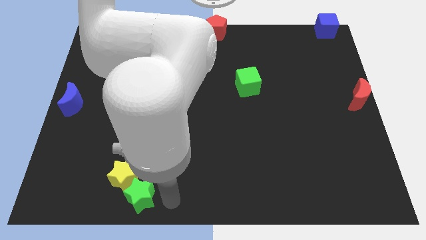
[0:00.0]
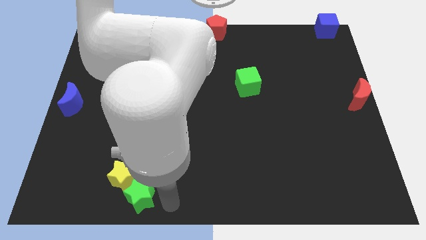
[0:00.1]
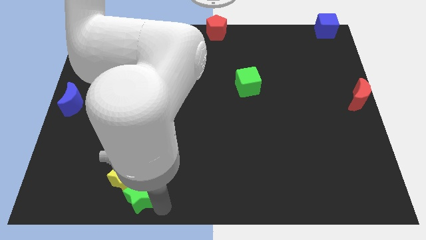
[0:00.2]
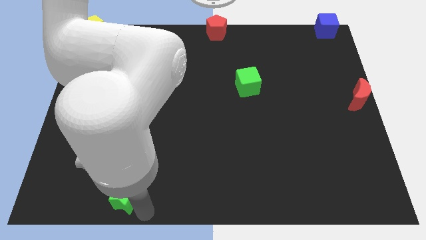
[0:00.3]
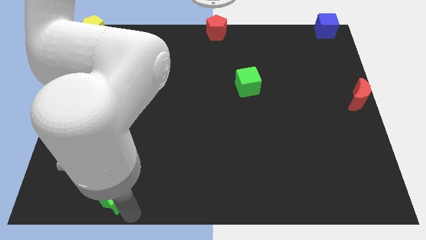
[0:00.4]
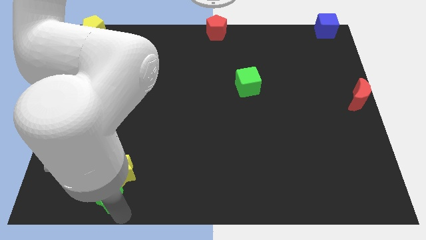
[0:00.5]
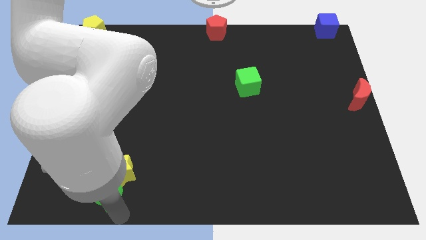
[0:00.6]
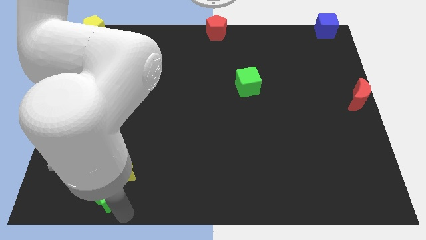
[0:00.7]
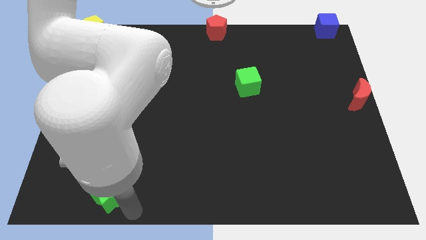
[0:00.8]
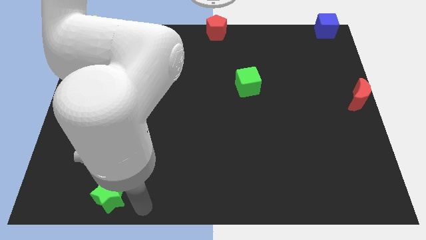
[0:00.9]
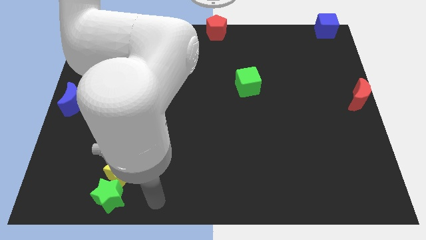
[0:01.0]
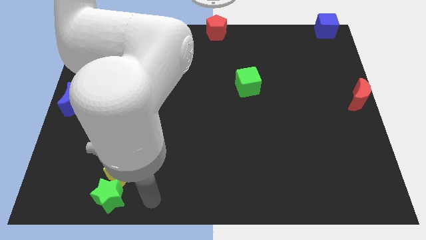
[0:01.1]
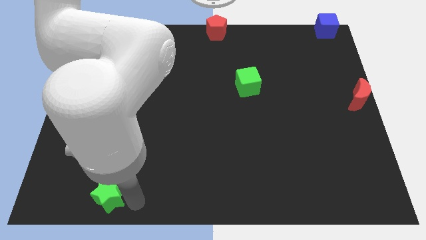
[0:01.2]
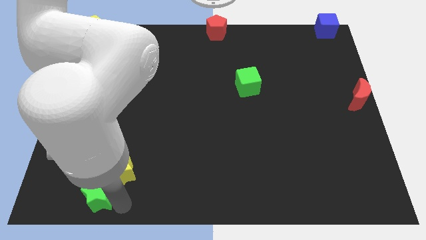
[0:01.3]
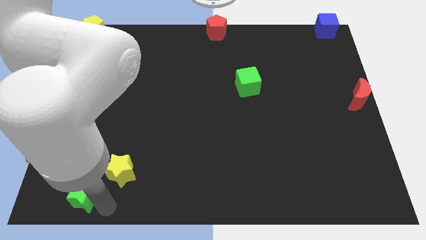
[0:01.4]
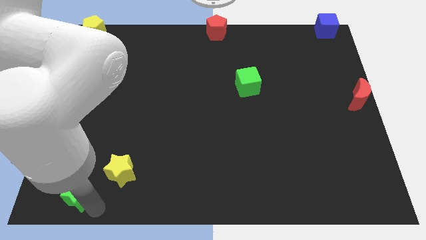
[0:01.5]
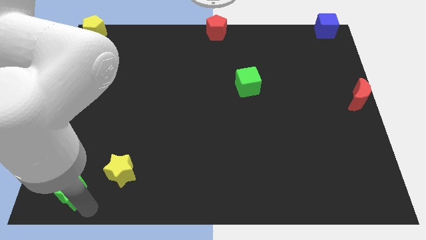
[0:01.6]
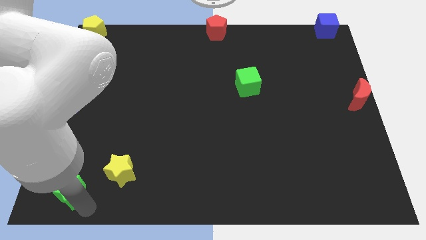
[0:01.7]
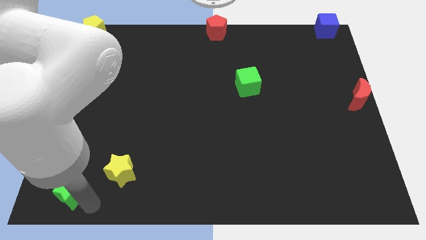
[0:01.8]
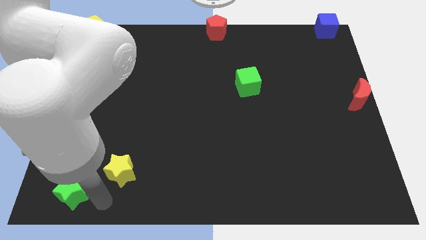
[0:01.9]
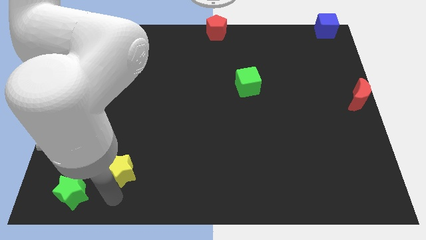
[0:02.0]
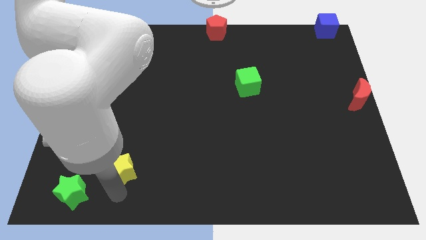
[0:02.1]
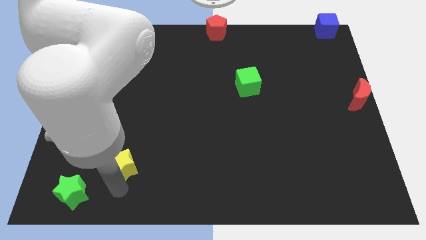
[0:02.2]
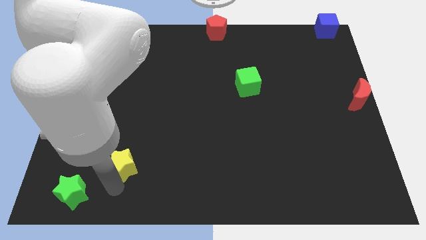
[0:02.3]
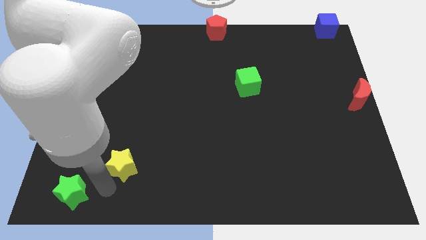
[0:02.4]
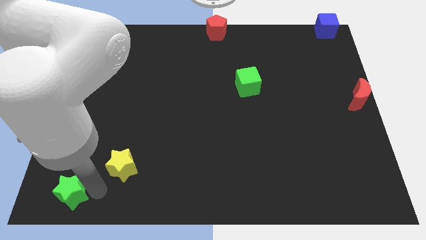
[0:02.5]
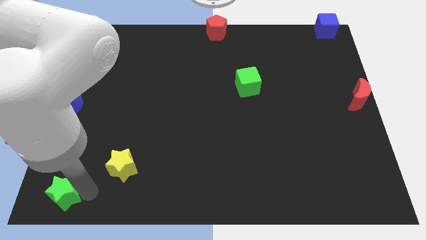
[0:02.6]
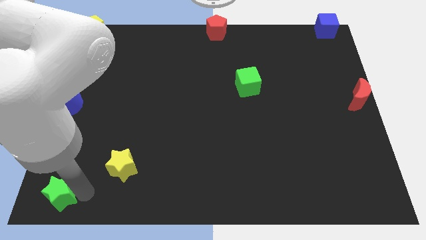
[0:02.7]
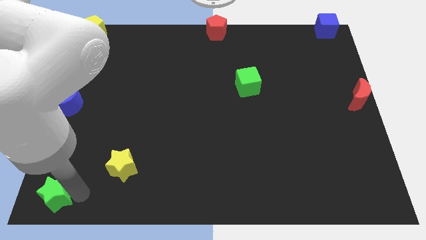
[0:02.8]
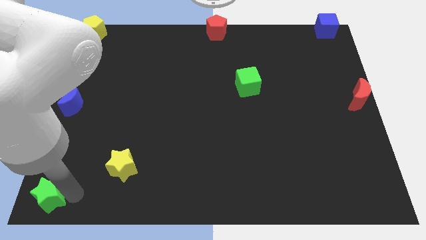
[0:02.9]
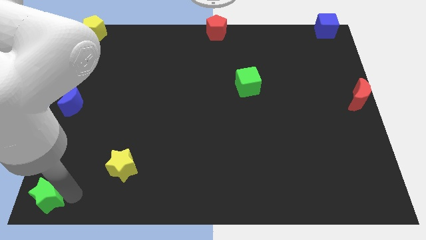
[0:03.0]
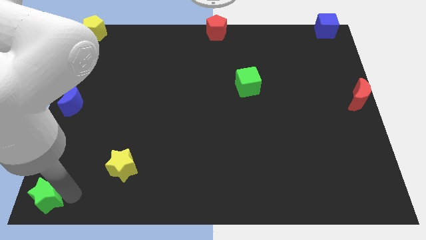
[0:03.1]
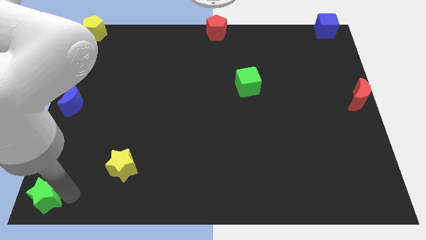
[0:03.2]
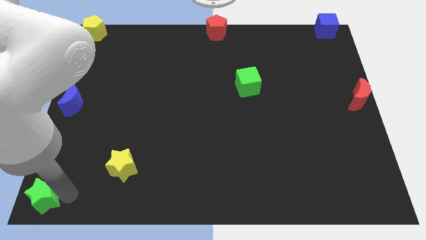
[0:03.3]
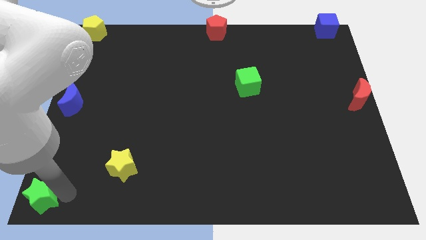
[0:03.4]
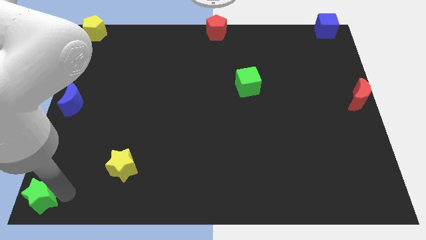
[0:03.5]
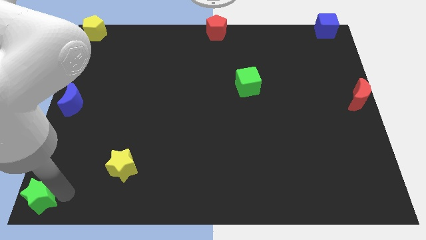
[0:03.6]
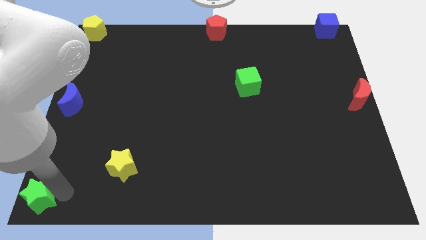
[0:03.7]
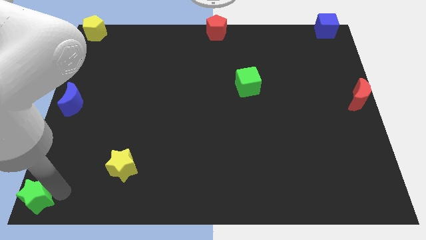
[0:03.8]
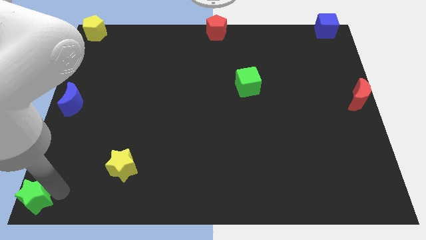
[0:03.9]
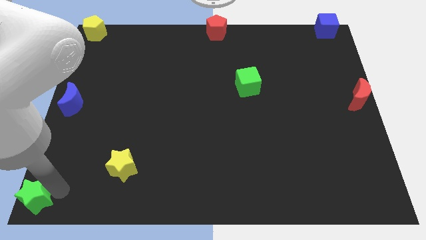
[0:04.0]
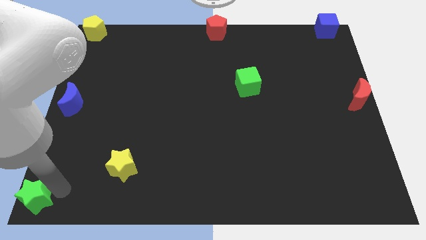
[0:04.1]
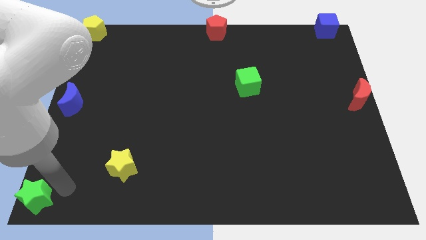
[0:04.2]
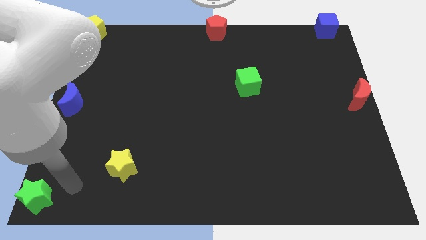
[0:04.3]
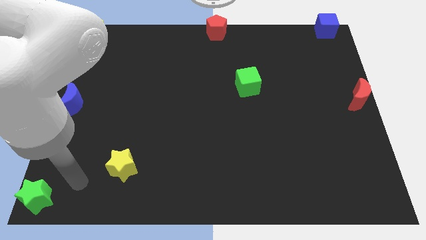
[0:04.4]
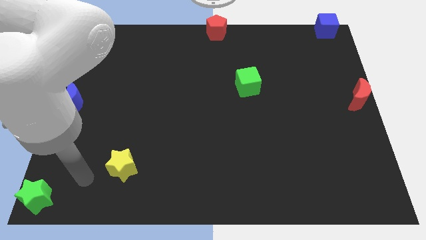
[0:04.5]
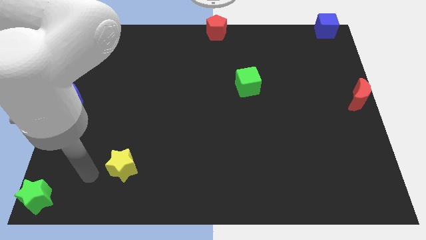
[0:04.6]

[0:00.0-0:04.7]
place the green star at the bottom left corner of the board

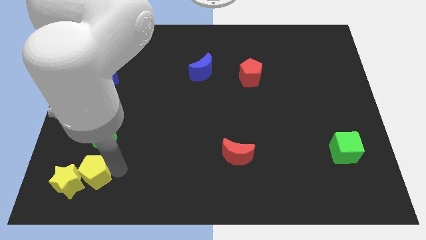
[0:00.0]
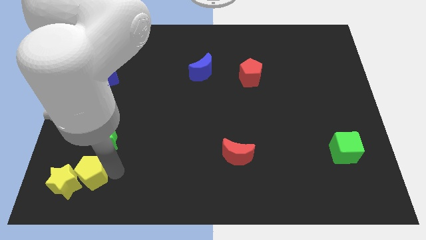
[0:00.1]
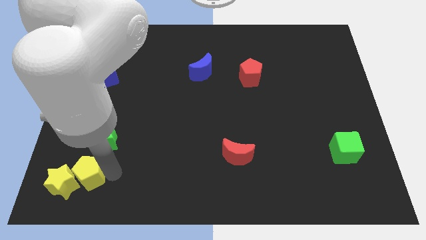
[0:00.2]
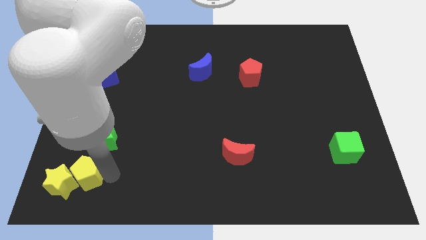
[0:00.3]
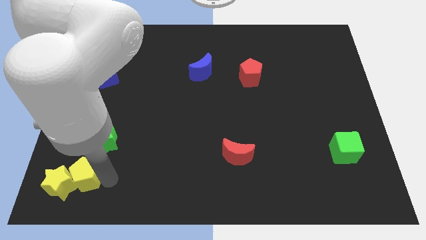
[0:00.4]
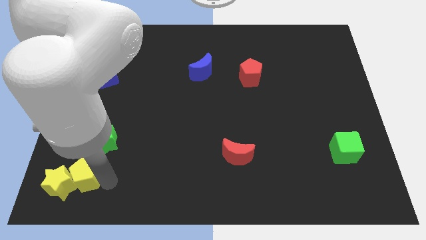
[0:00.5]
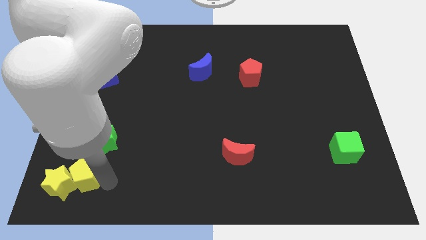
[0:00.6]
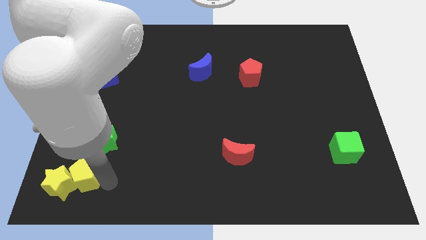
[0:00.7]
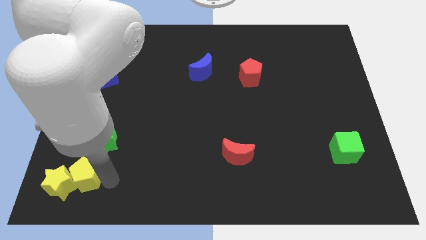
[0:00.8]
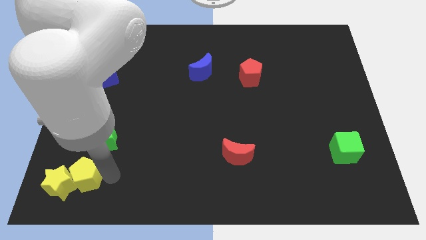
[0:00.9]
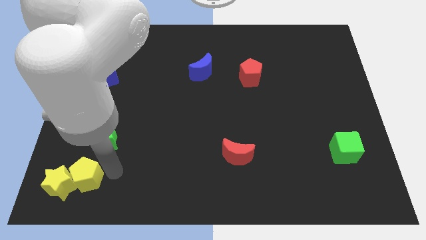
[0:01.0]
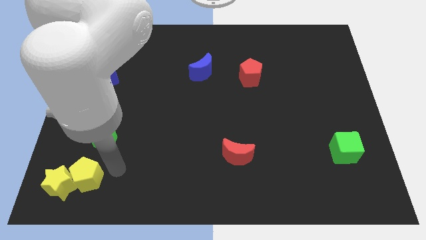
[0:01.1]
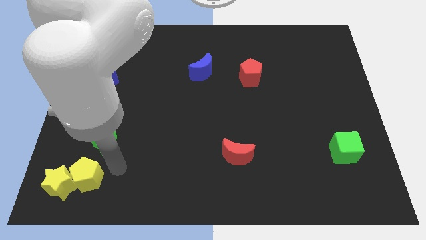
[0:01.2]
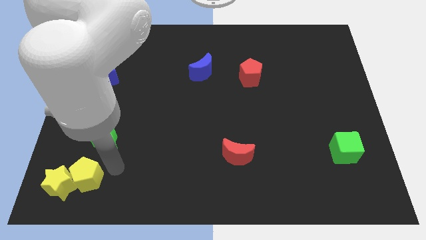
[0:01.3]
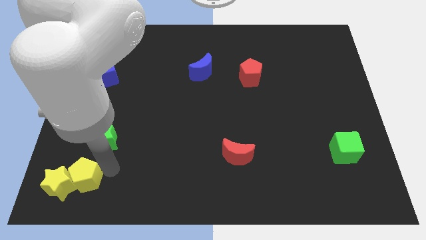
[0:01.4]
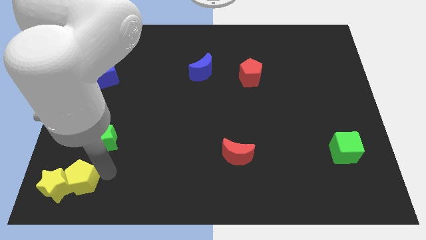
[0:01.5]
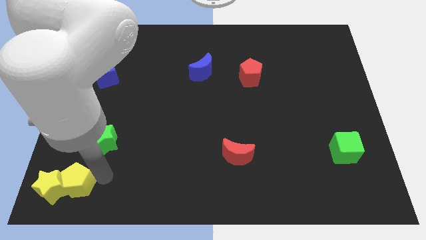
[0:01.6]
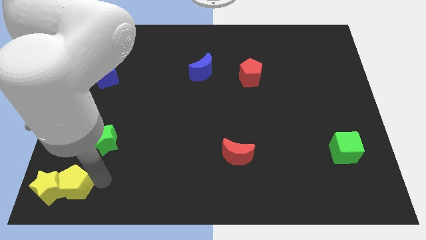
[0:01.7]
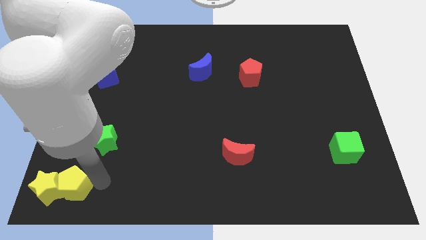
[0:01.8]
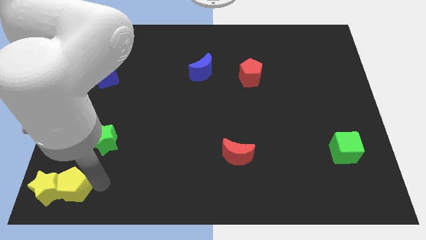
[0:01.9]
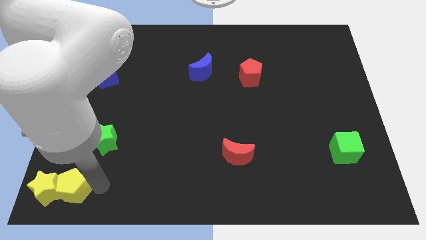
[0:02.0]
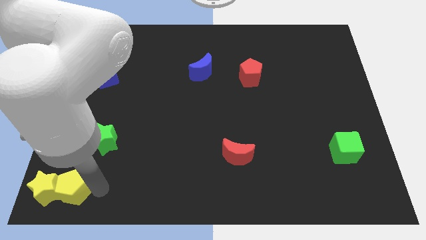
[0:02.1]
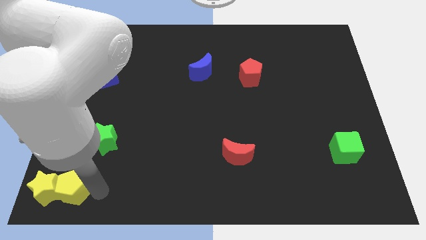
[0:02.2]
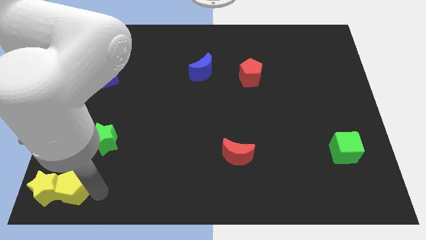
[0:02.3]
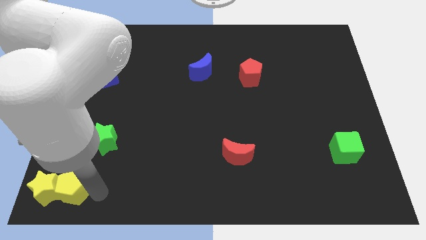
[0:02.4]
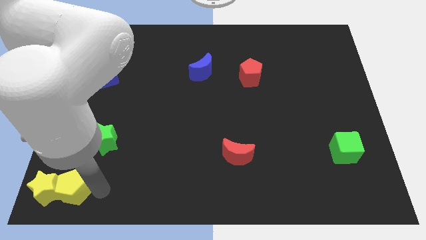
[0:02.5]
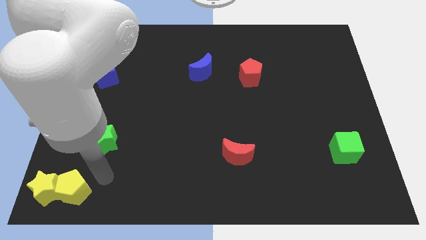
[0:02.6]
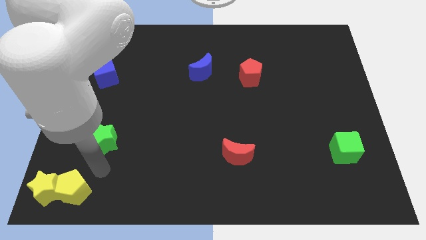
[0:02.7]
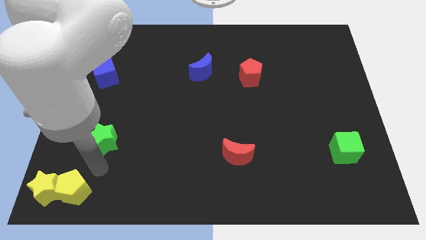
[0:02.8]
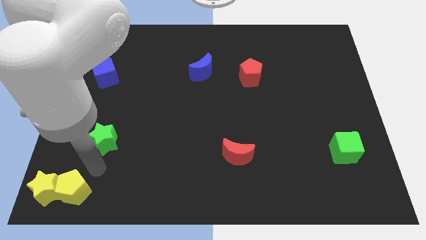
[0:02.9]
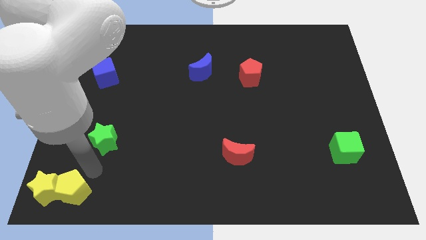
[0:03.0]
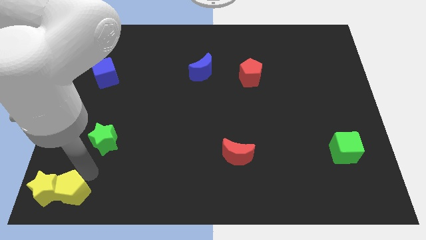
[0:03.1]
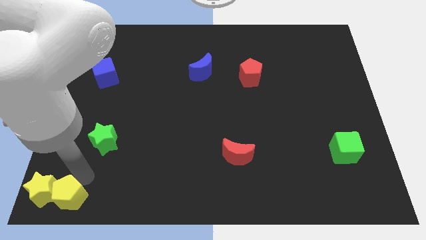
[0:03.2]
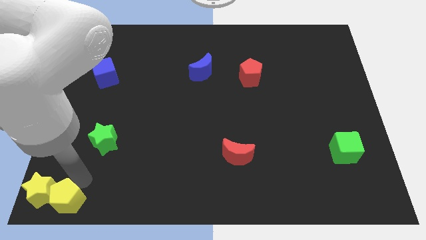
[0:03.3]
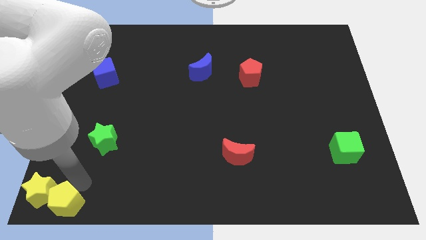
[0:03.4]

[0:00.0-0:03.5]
move the yellow blocks towards the bottom left corner of the board

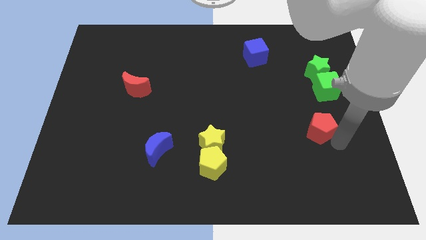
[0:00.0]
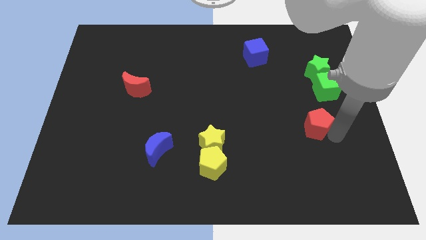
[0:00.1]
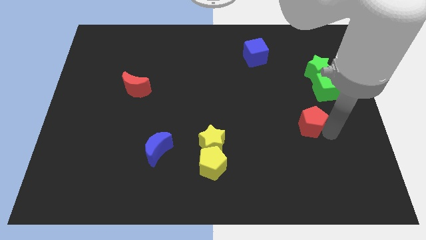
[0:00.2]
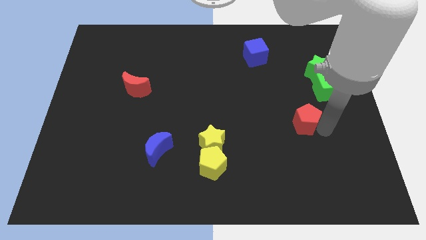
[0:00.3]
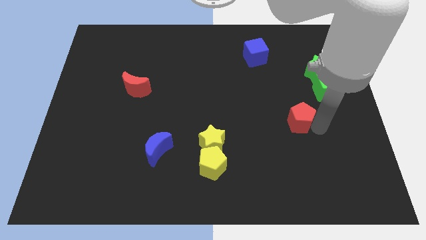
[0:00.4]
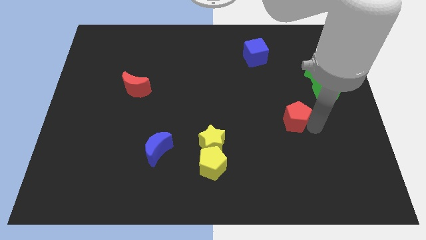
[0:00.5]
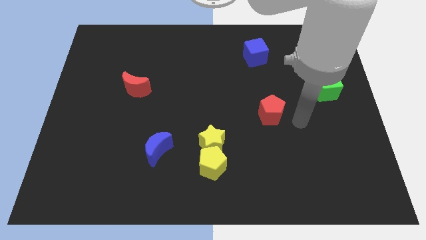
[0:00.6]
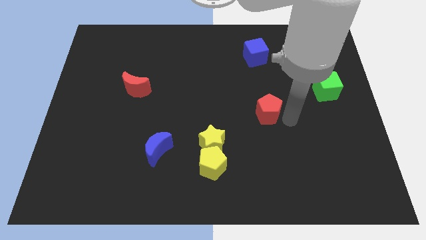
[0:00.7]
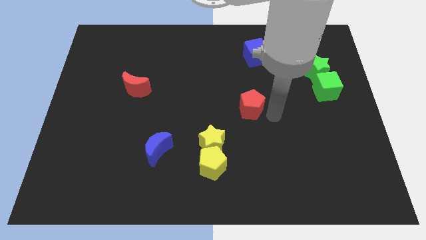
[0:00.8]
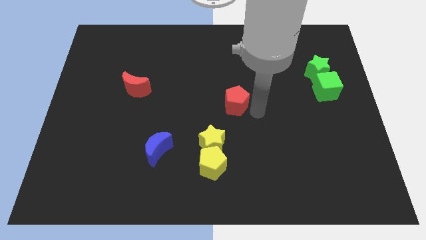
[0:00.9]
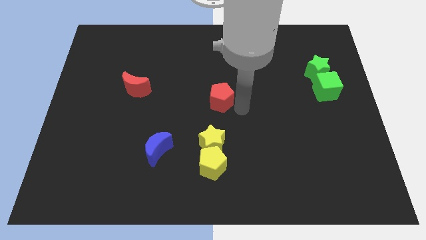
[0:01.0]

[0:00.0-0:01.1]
push red pentagon to the center
